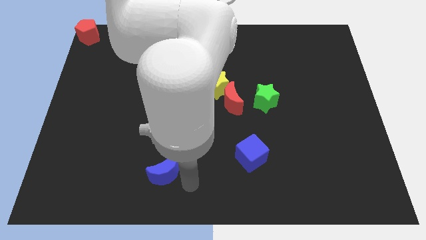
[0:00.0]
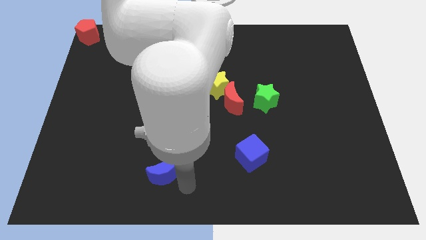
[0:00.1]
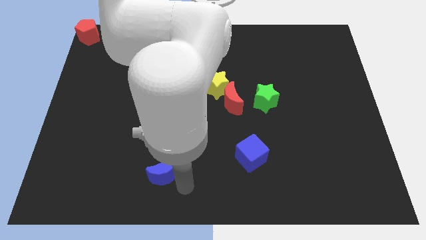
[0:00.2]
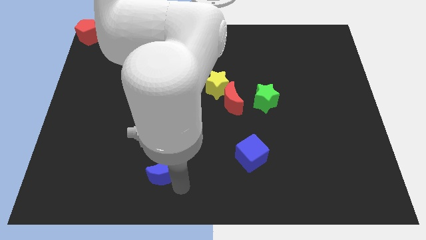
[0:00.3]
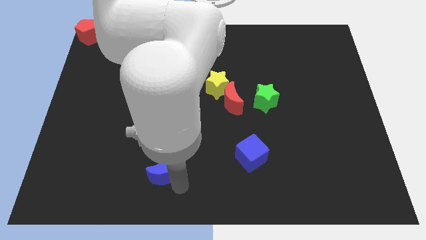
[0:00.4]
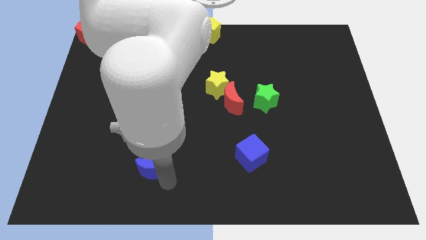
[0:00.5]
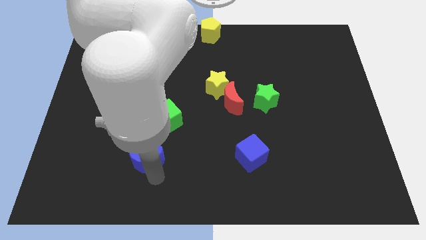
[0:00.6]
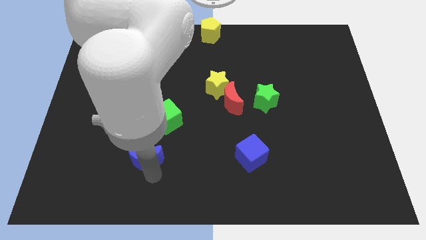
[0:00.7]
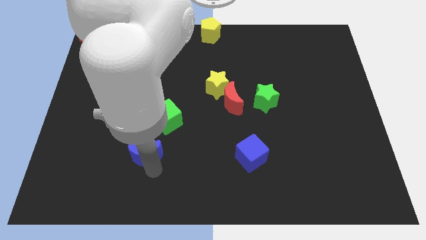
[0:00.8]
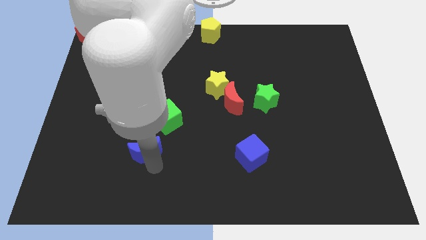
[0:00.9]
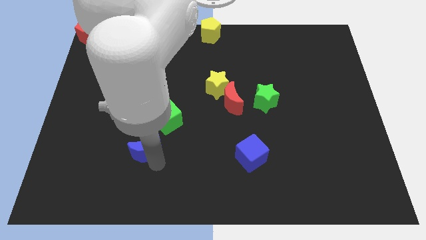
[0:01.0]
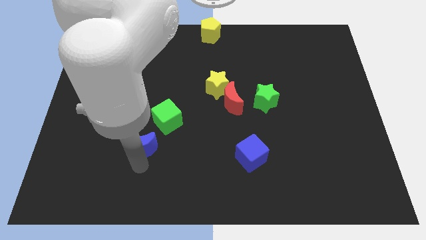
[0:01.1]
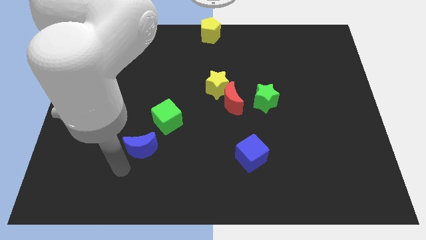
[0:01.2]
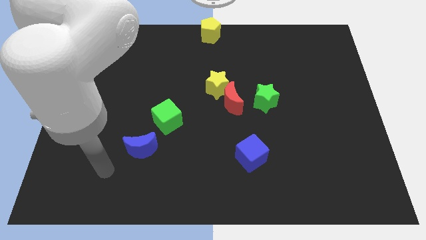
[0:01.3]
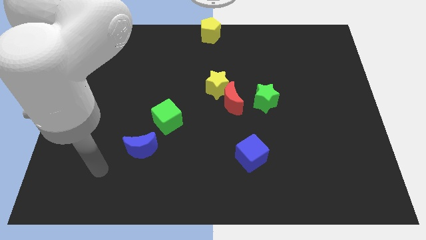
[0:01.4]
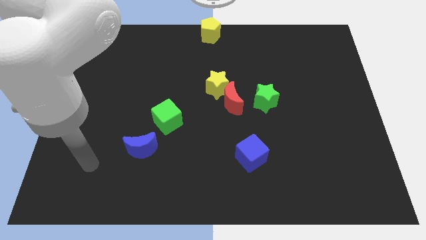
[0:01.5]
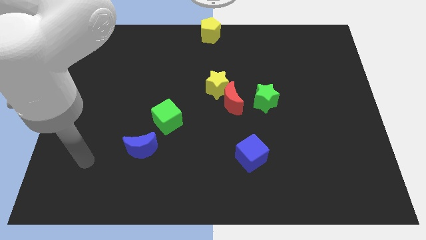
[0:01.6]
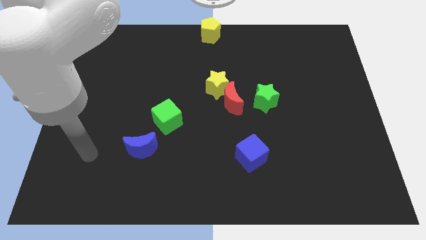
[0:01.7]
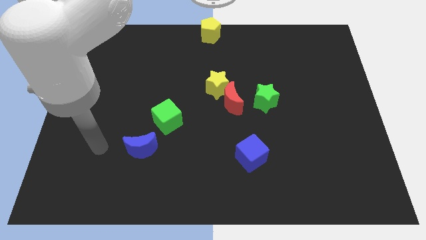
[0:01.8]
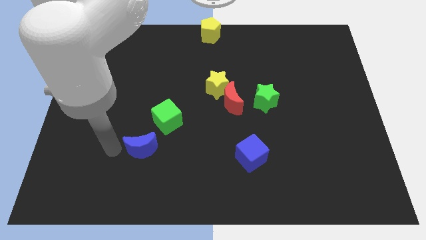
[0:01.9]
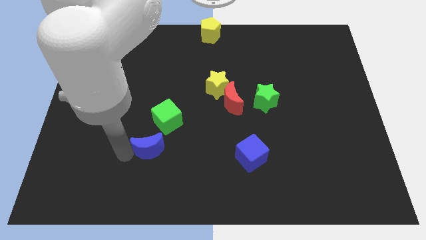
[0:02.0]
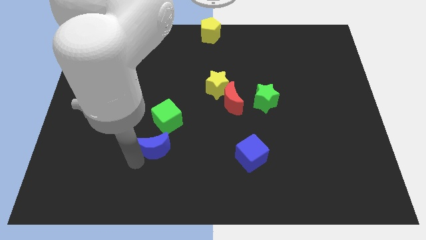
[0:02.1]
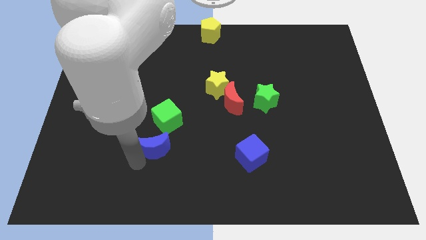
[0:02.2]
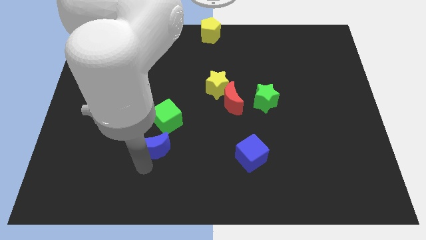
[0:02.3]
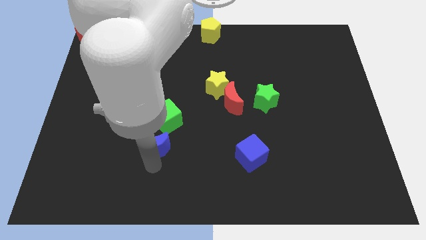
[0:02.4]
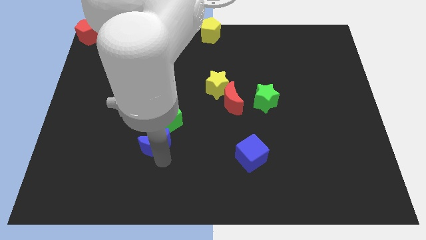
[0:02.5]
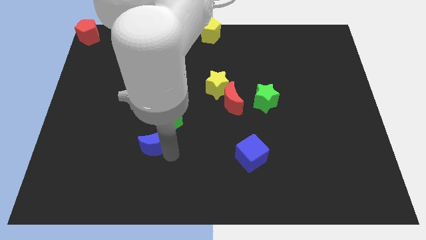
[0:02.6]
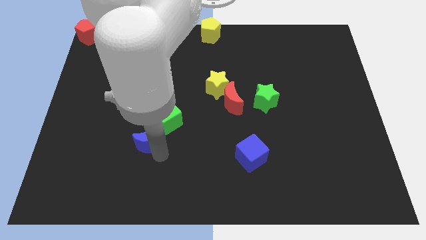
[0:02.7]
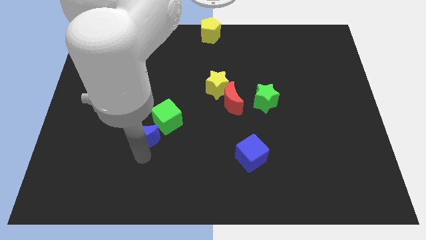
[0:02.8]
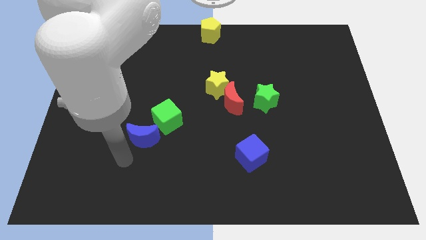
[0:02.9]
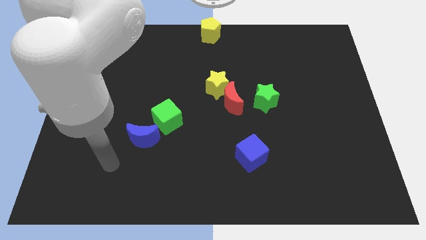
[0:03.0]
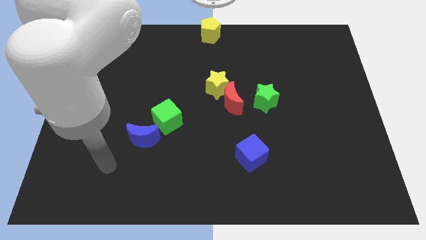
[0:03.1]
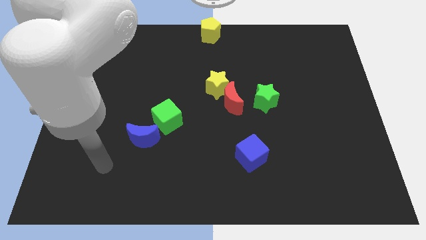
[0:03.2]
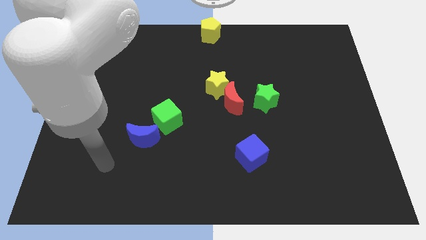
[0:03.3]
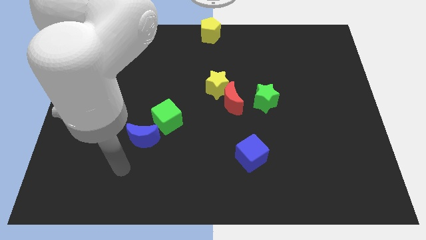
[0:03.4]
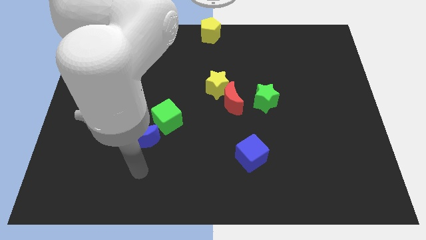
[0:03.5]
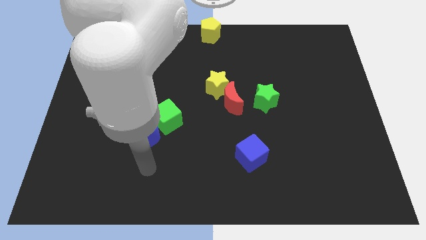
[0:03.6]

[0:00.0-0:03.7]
place the blue moon left to the green cube

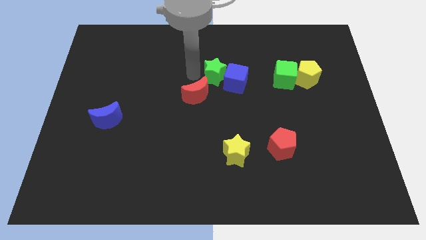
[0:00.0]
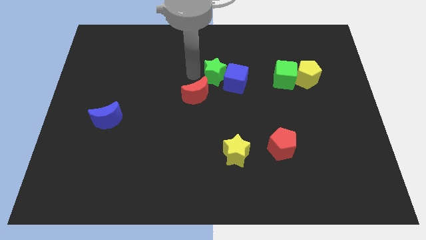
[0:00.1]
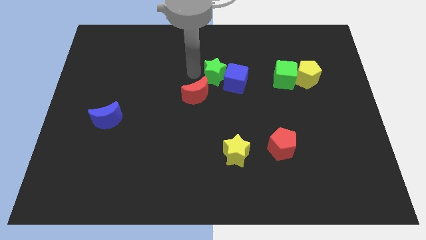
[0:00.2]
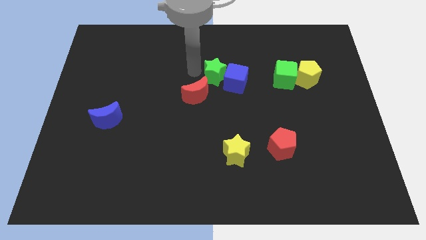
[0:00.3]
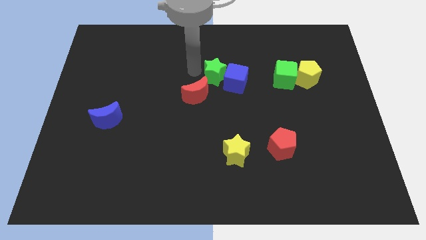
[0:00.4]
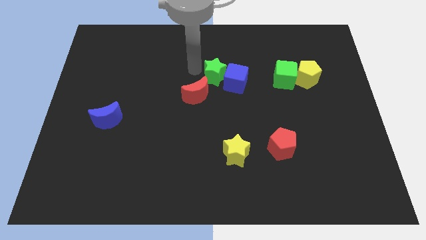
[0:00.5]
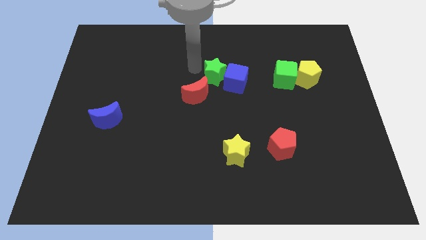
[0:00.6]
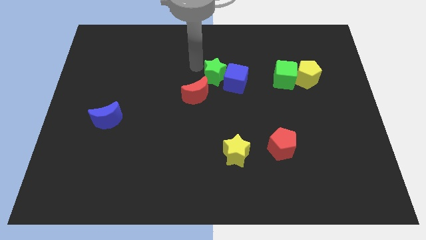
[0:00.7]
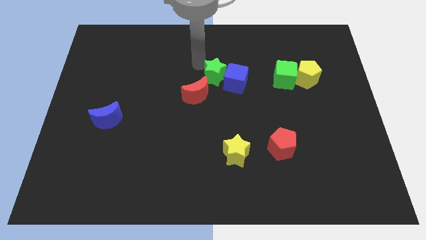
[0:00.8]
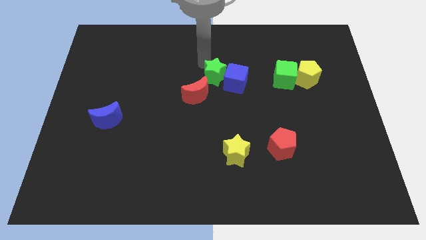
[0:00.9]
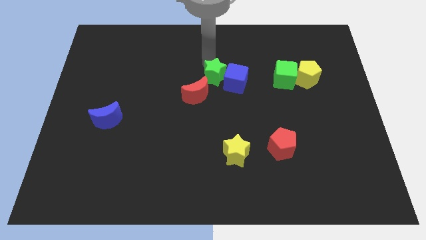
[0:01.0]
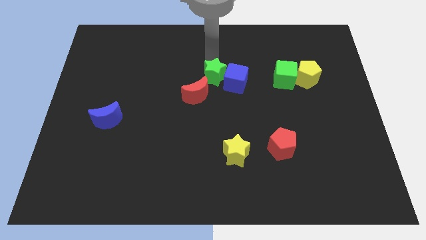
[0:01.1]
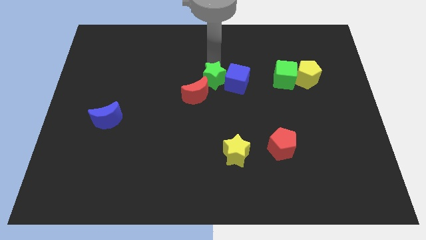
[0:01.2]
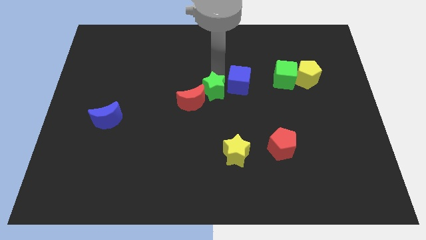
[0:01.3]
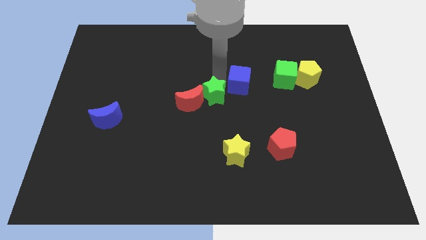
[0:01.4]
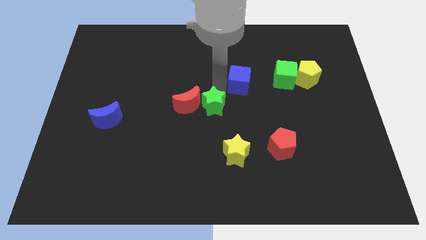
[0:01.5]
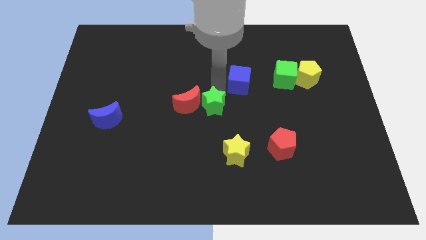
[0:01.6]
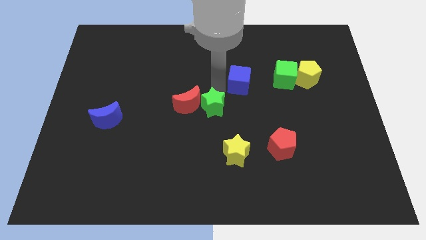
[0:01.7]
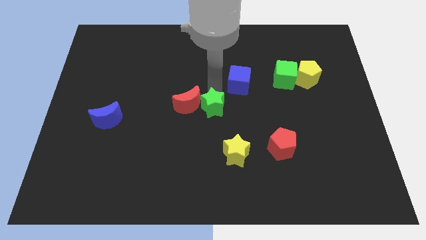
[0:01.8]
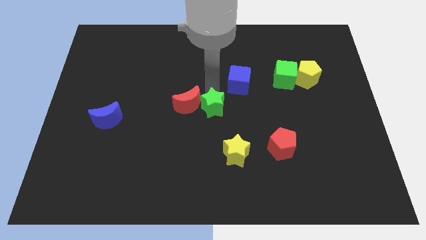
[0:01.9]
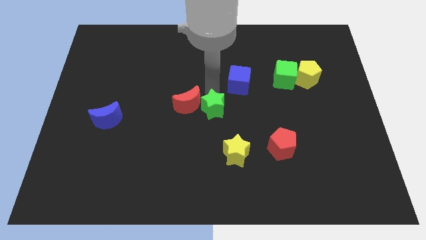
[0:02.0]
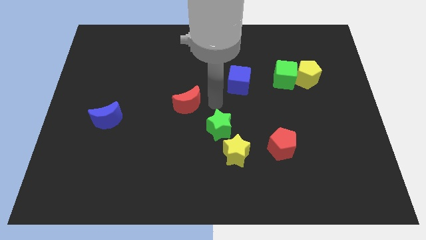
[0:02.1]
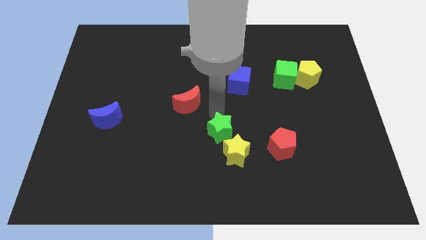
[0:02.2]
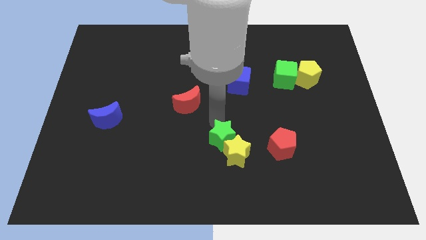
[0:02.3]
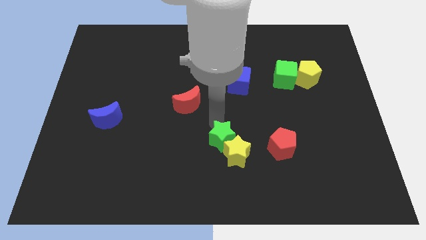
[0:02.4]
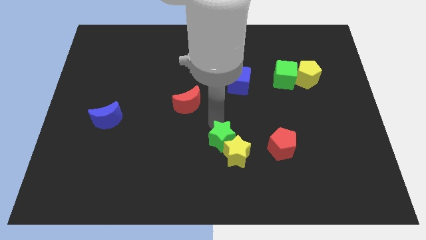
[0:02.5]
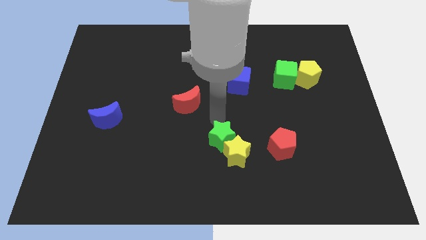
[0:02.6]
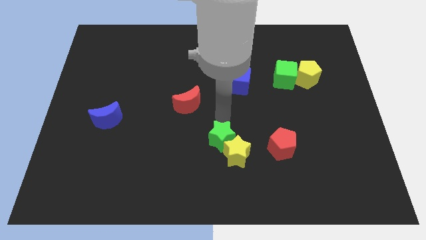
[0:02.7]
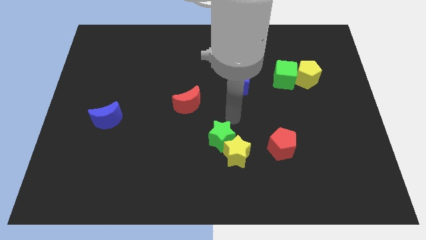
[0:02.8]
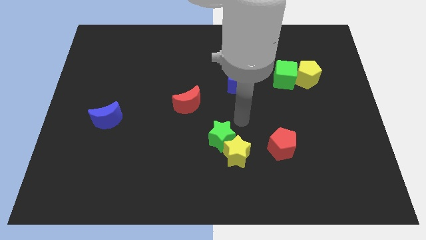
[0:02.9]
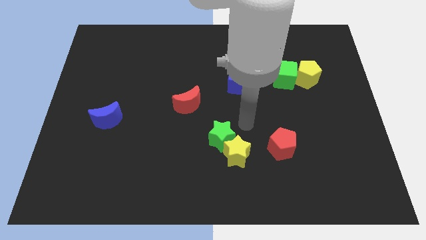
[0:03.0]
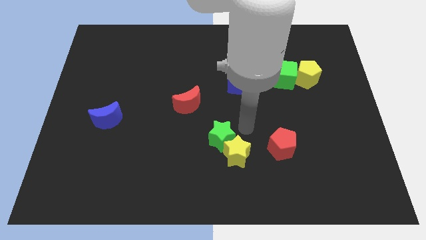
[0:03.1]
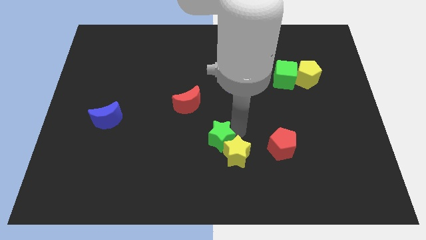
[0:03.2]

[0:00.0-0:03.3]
move the green star on top of the yellow star

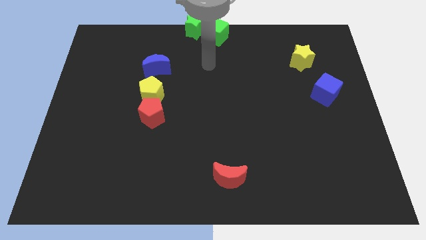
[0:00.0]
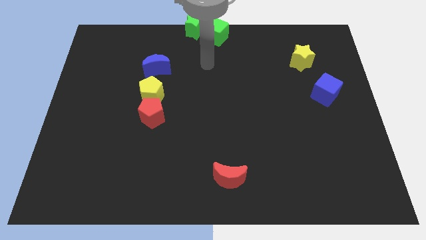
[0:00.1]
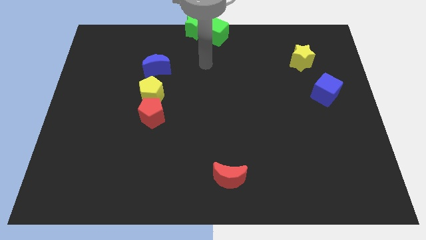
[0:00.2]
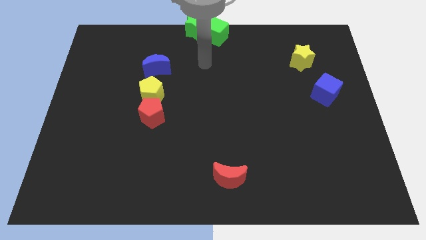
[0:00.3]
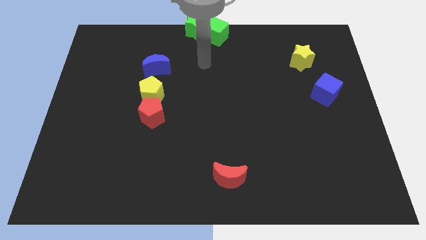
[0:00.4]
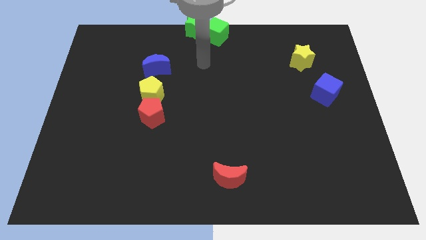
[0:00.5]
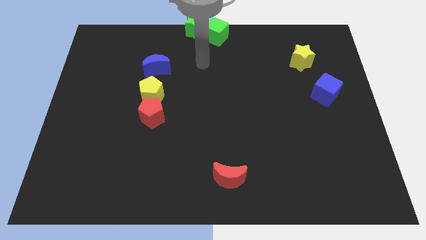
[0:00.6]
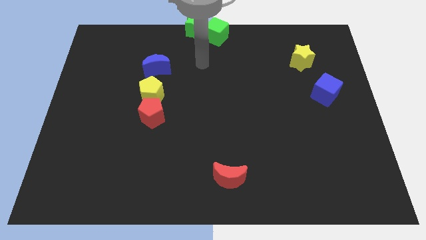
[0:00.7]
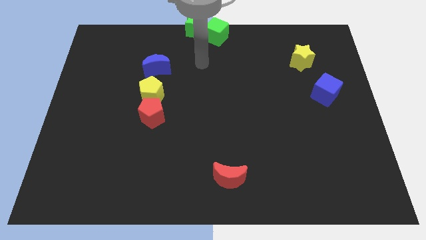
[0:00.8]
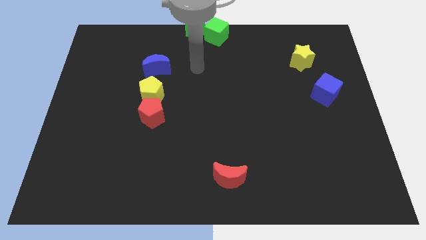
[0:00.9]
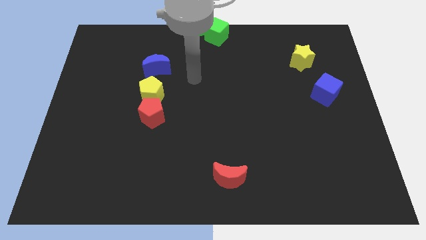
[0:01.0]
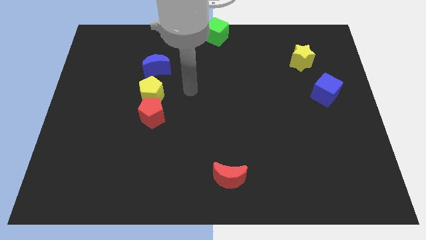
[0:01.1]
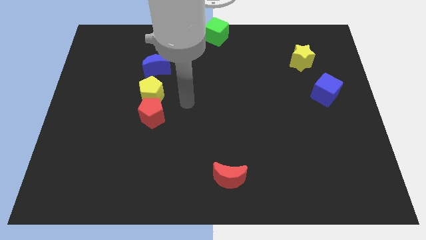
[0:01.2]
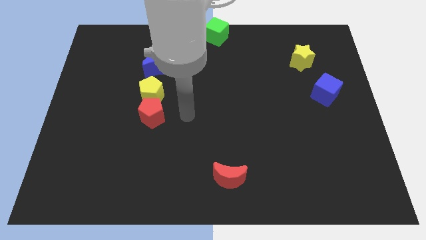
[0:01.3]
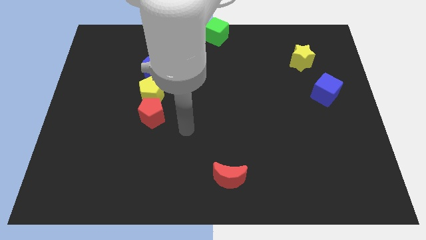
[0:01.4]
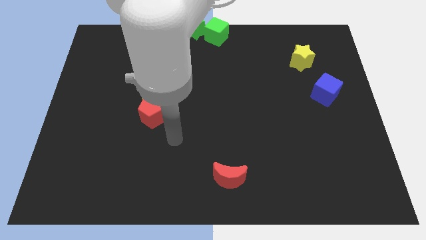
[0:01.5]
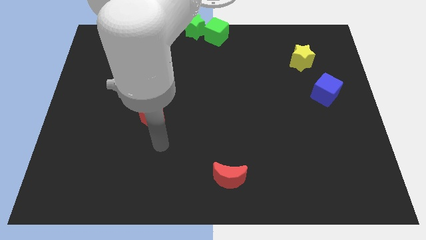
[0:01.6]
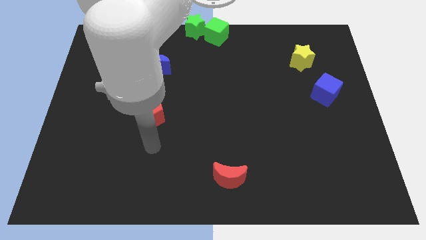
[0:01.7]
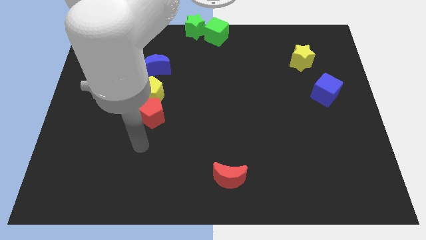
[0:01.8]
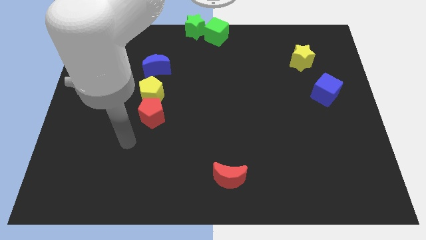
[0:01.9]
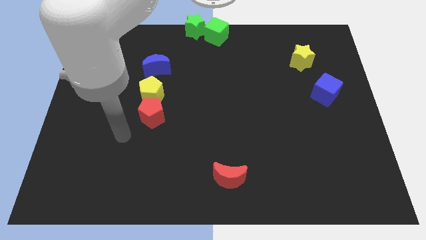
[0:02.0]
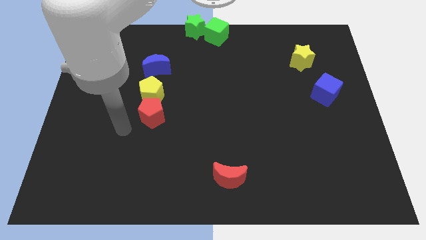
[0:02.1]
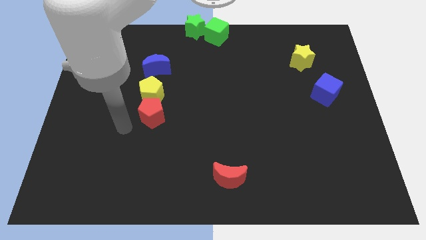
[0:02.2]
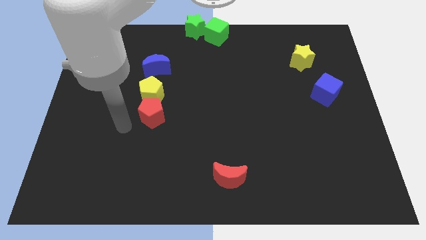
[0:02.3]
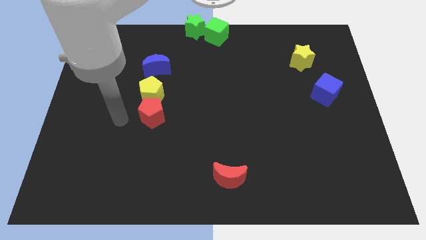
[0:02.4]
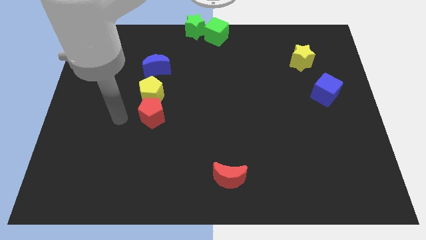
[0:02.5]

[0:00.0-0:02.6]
move your hand to the left side of the red pentagon
